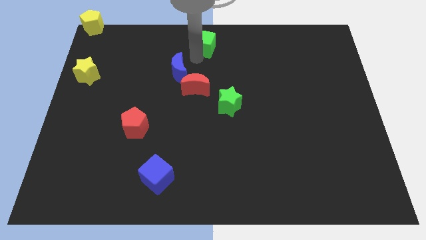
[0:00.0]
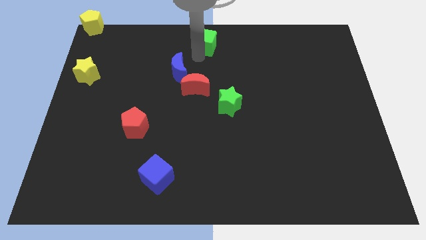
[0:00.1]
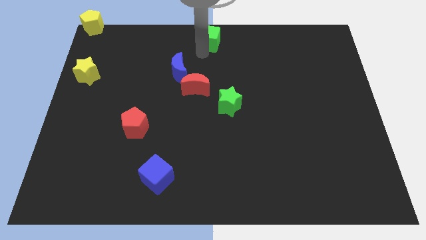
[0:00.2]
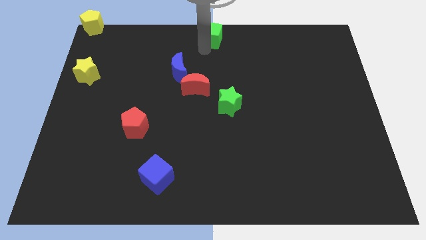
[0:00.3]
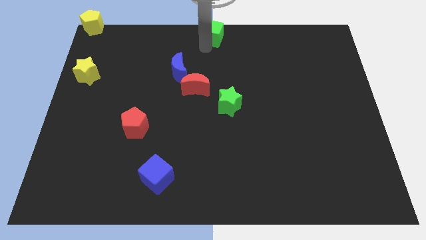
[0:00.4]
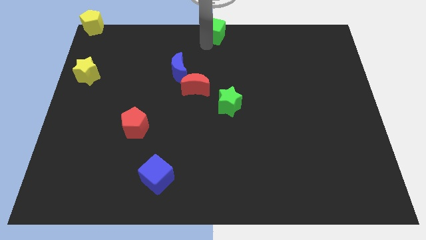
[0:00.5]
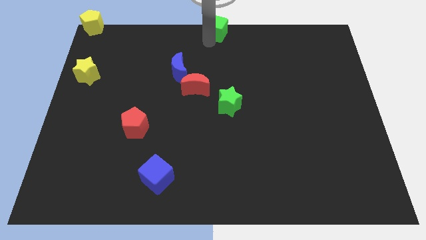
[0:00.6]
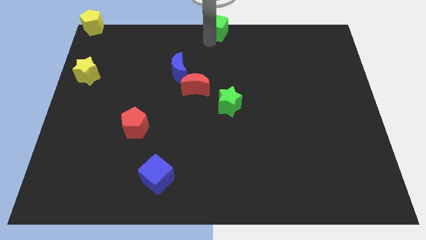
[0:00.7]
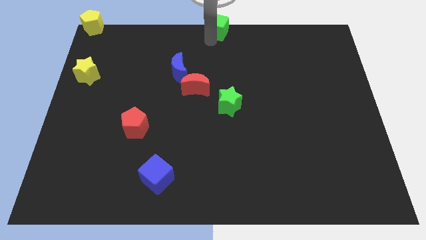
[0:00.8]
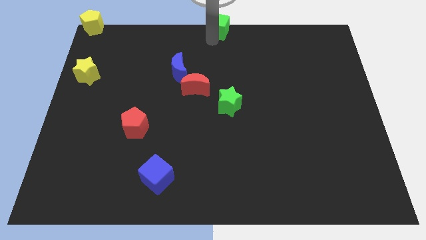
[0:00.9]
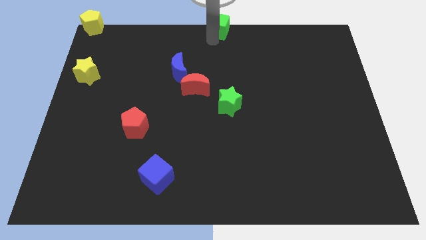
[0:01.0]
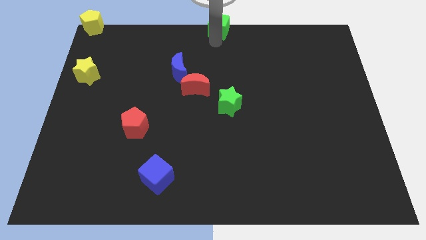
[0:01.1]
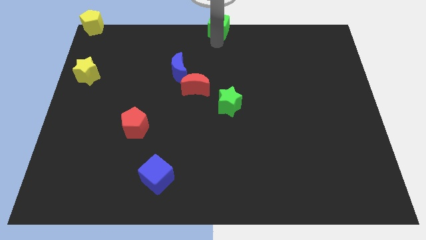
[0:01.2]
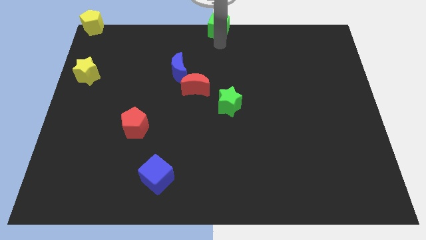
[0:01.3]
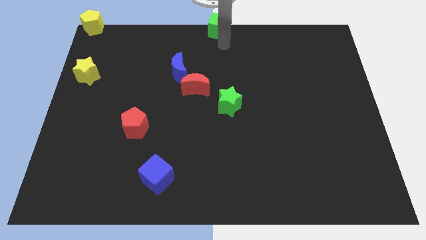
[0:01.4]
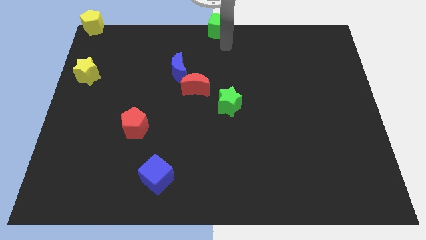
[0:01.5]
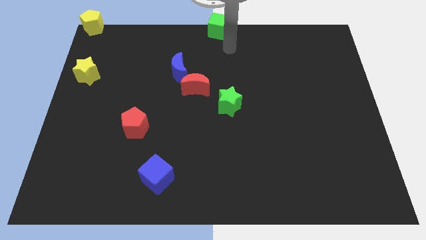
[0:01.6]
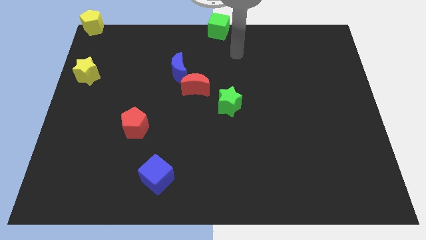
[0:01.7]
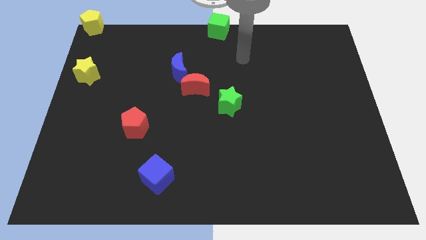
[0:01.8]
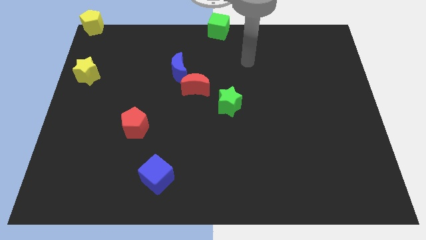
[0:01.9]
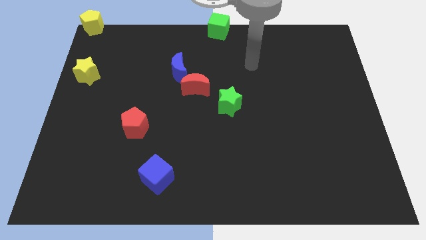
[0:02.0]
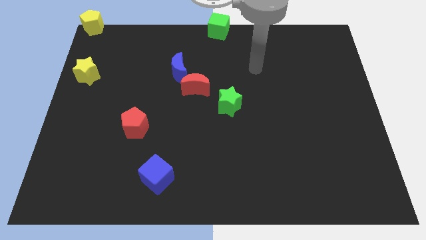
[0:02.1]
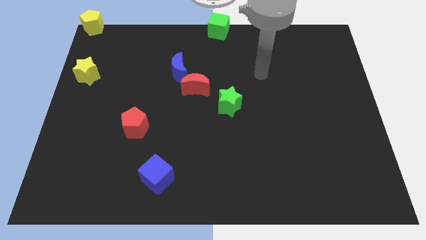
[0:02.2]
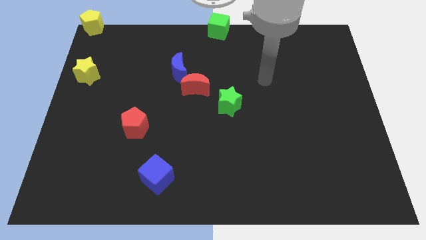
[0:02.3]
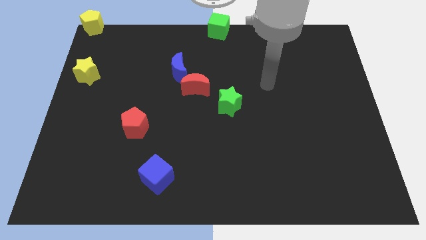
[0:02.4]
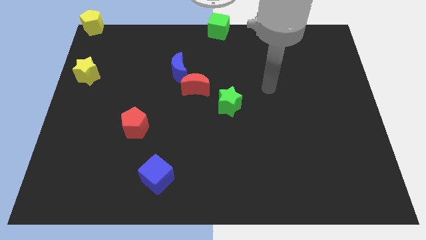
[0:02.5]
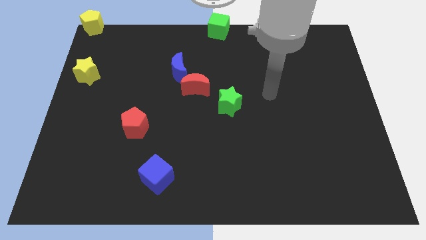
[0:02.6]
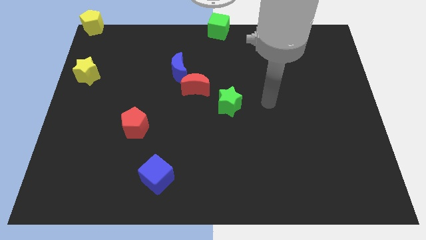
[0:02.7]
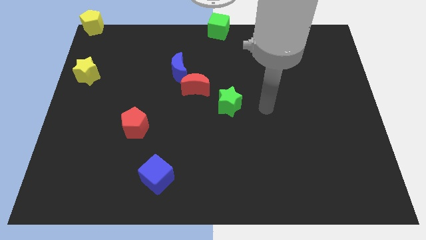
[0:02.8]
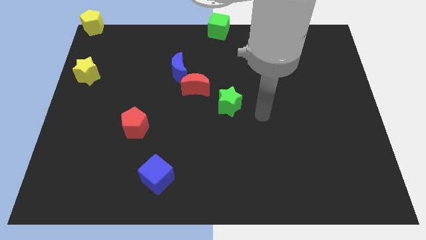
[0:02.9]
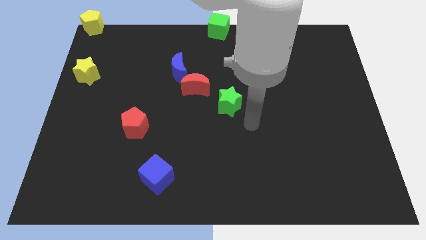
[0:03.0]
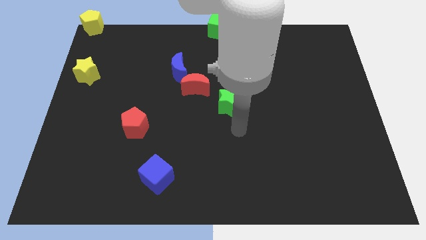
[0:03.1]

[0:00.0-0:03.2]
move the green cube towards the top centre of the board

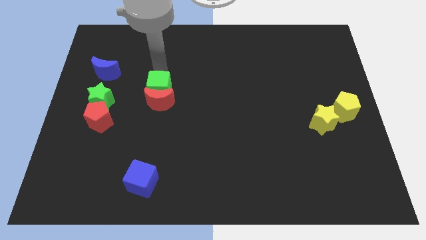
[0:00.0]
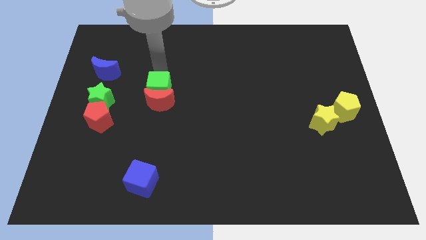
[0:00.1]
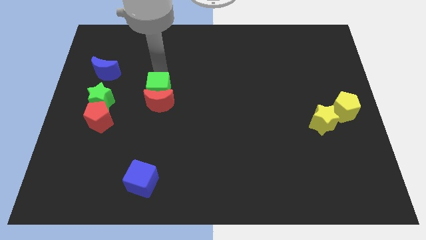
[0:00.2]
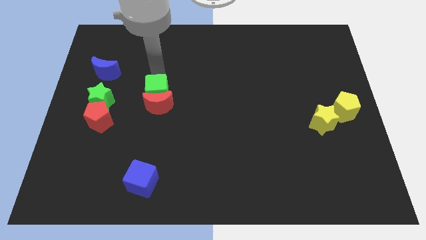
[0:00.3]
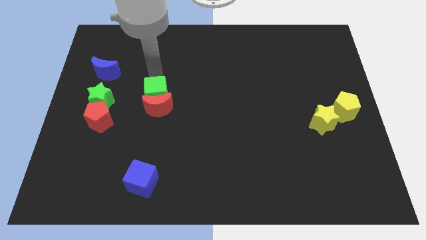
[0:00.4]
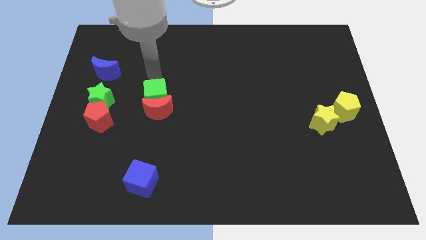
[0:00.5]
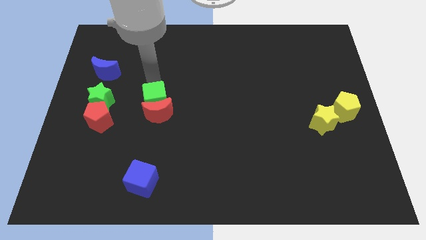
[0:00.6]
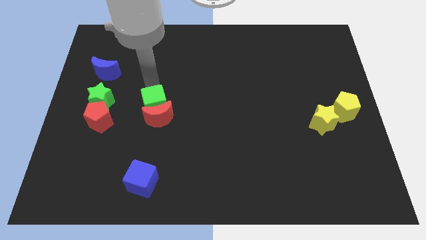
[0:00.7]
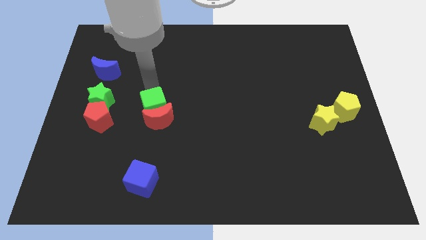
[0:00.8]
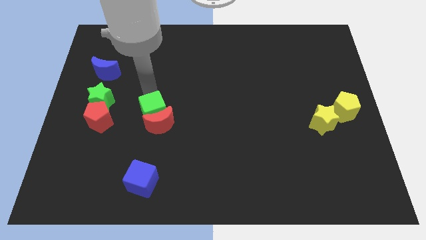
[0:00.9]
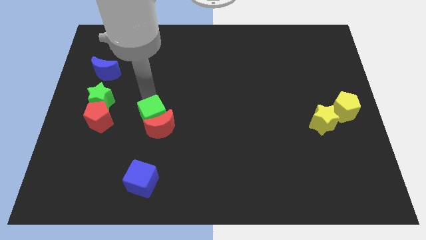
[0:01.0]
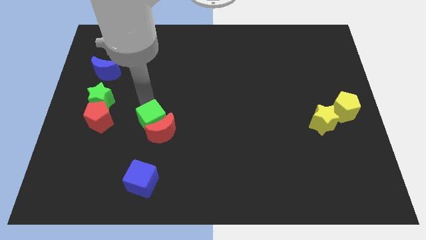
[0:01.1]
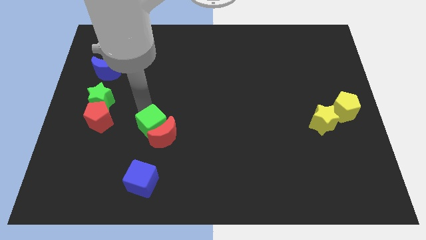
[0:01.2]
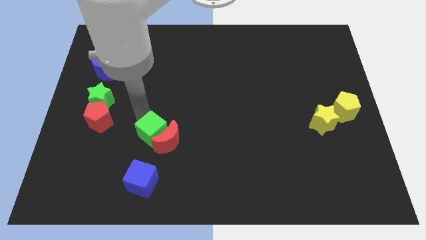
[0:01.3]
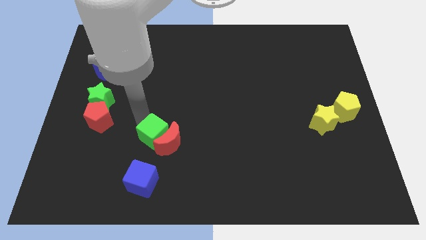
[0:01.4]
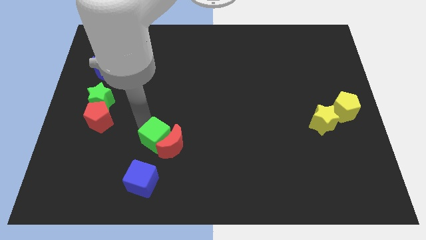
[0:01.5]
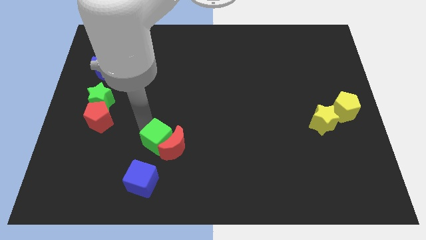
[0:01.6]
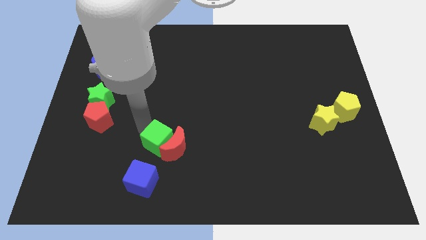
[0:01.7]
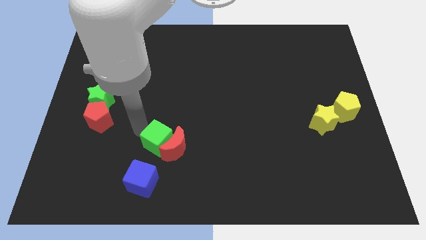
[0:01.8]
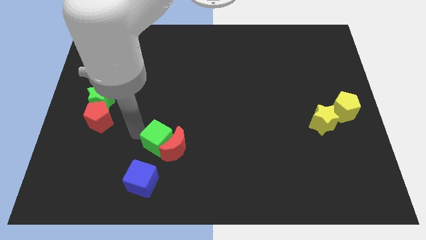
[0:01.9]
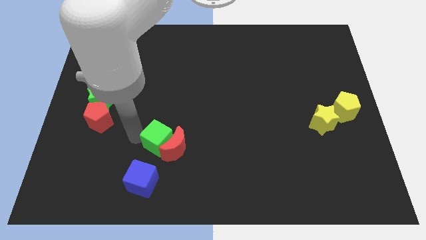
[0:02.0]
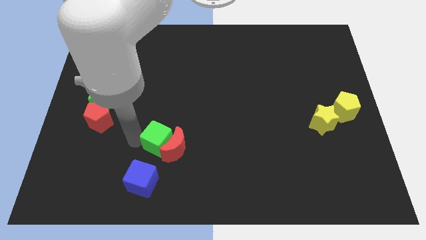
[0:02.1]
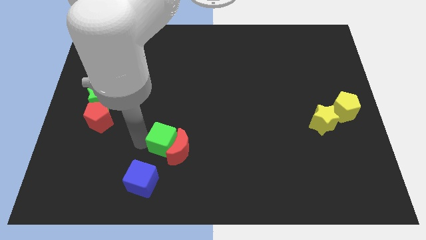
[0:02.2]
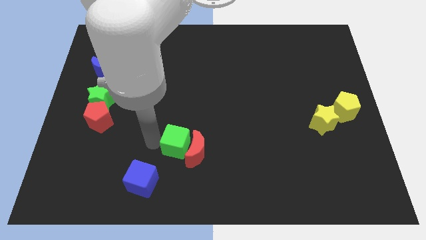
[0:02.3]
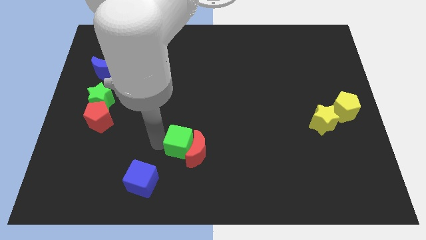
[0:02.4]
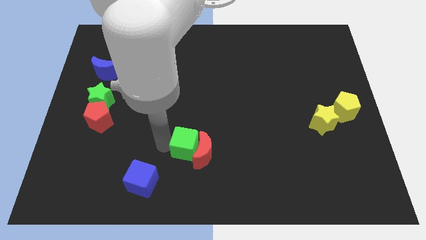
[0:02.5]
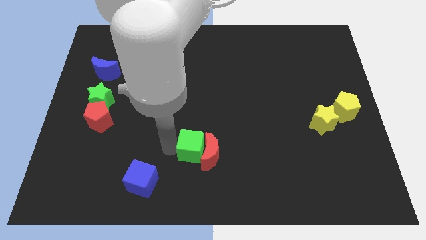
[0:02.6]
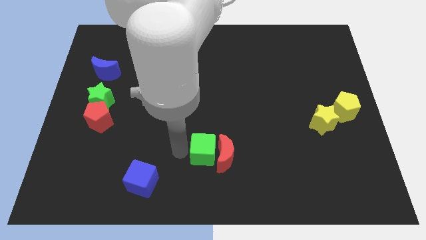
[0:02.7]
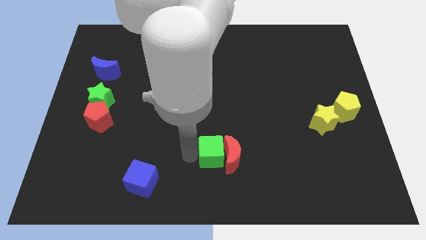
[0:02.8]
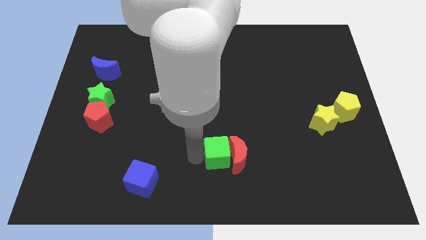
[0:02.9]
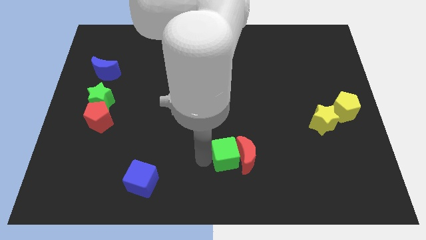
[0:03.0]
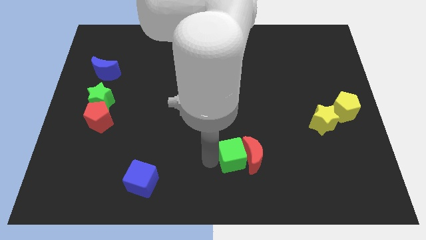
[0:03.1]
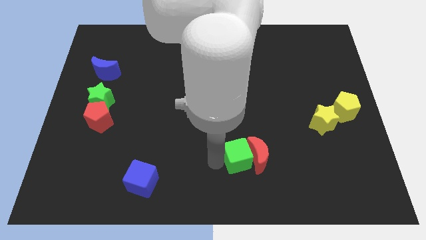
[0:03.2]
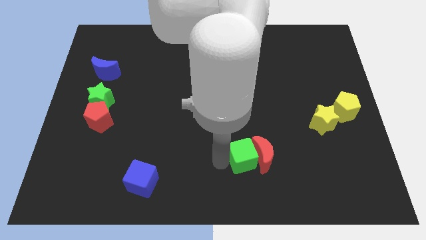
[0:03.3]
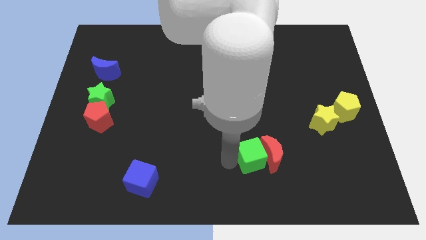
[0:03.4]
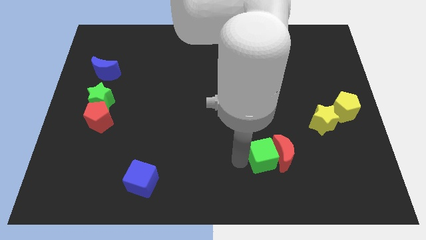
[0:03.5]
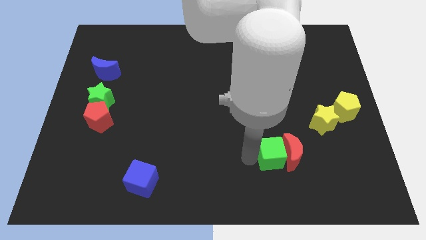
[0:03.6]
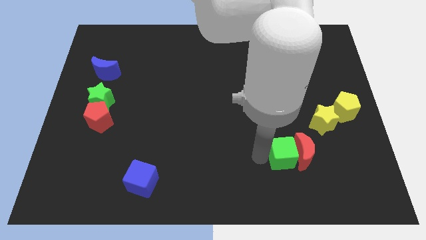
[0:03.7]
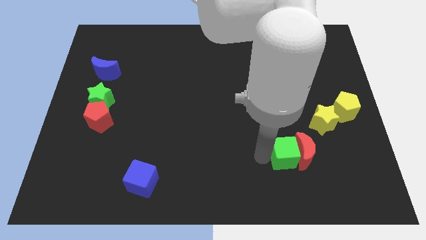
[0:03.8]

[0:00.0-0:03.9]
move the green cube along with the red moon towards the bottom right side of the board

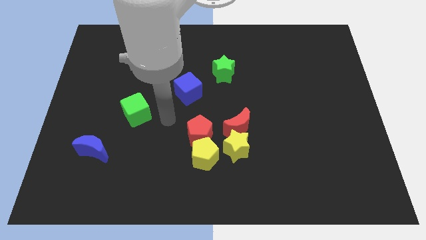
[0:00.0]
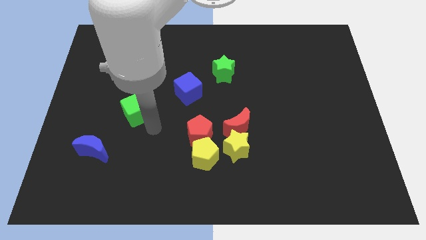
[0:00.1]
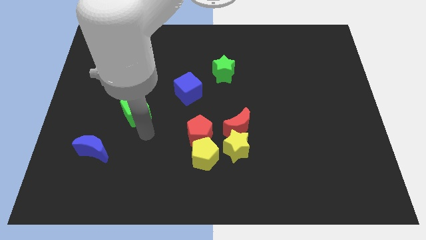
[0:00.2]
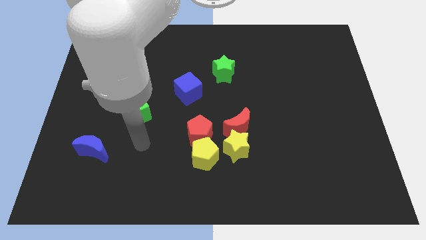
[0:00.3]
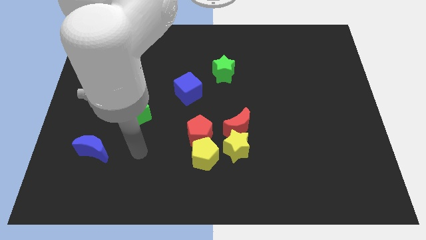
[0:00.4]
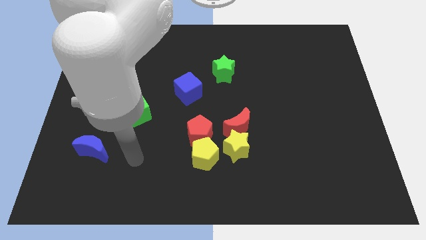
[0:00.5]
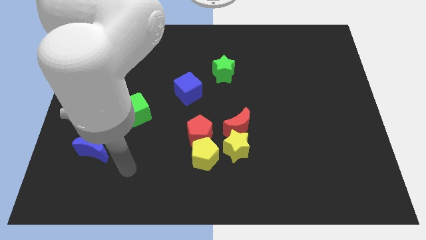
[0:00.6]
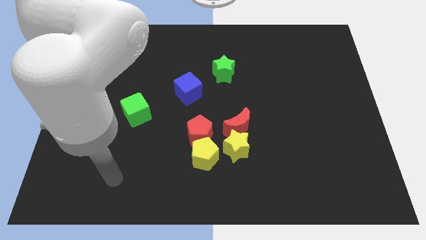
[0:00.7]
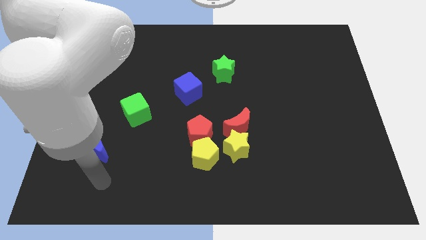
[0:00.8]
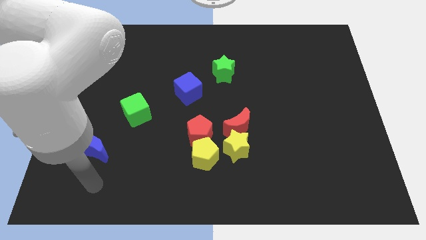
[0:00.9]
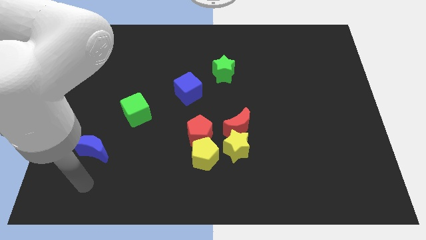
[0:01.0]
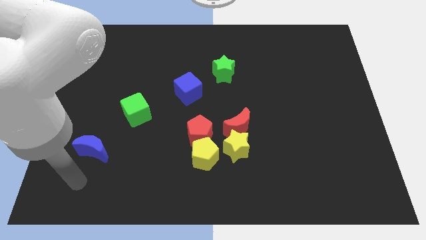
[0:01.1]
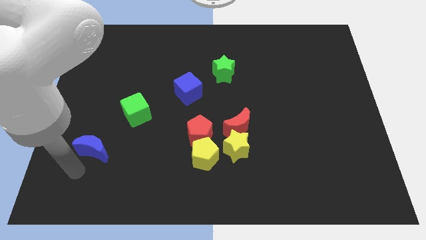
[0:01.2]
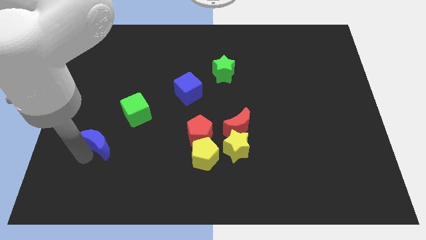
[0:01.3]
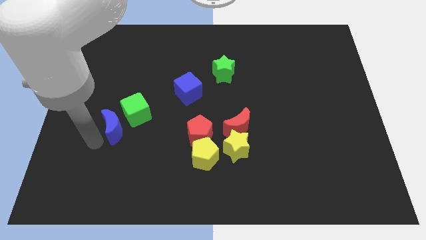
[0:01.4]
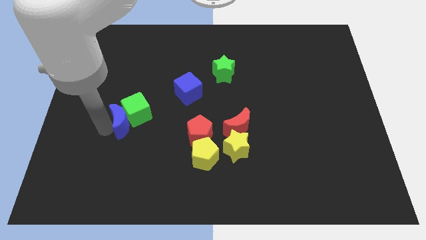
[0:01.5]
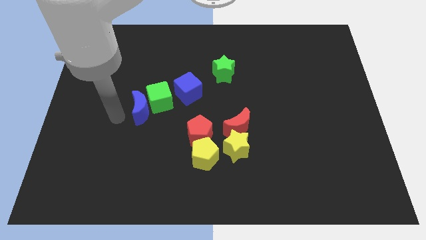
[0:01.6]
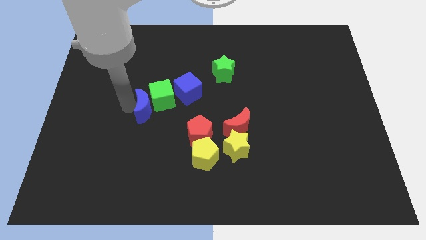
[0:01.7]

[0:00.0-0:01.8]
push the blue moon into the green cube
